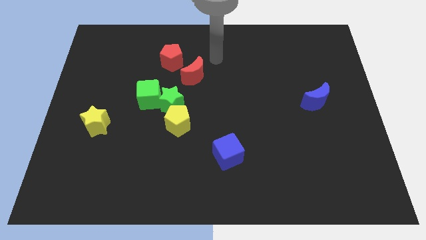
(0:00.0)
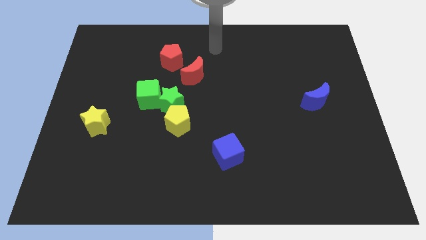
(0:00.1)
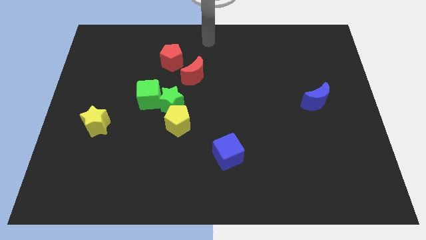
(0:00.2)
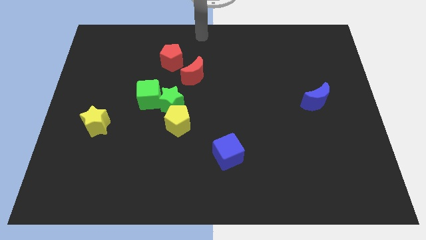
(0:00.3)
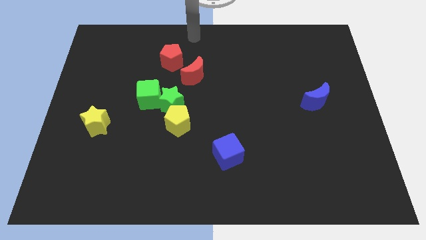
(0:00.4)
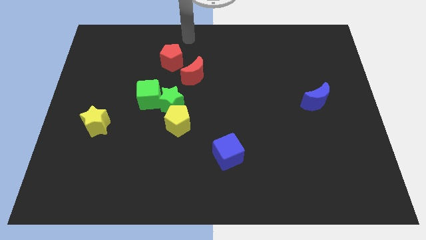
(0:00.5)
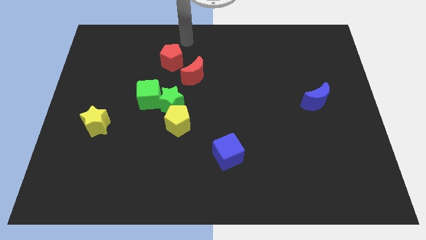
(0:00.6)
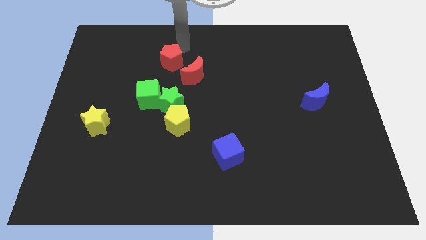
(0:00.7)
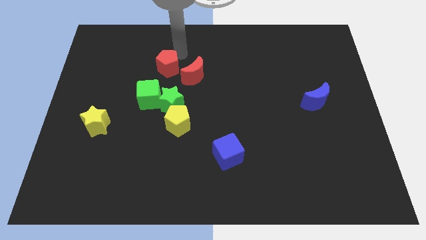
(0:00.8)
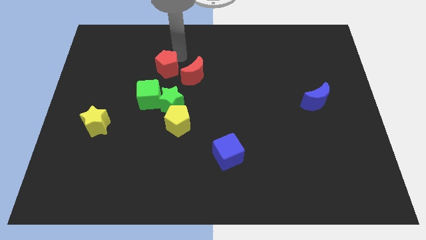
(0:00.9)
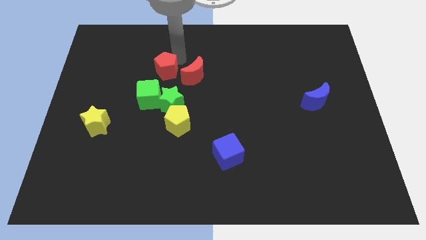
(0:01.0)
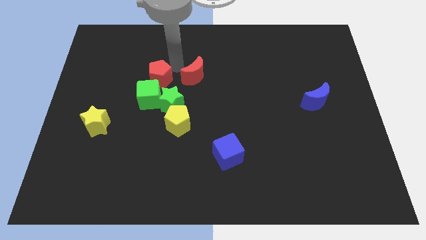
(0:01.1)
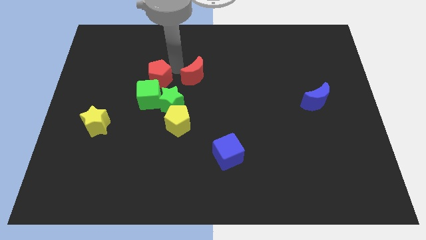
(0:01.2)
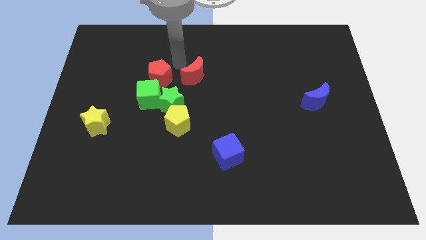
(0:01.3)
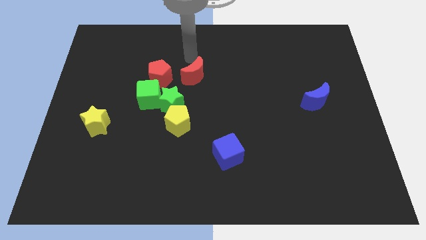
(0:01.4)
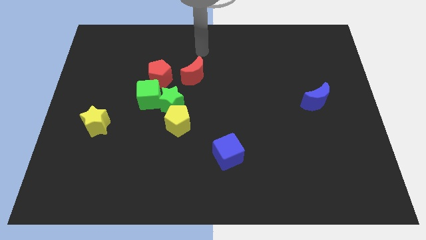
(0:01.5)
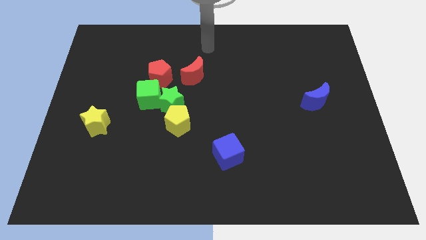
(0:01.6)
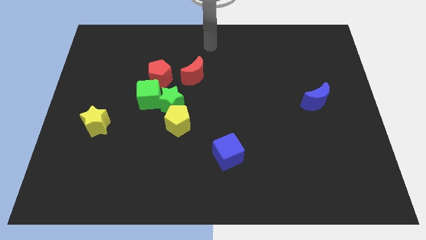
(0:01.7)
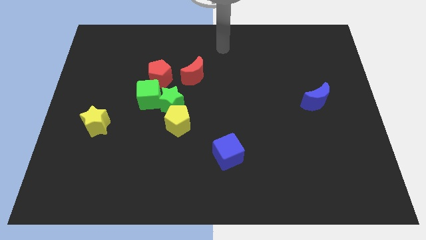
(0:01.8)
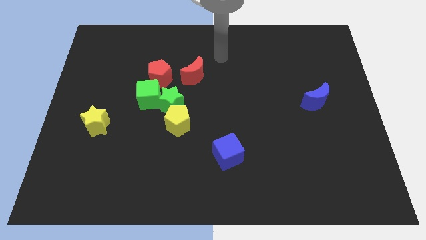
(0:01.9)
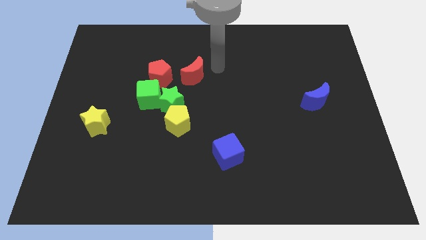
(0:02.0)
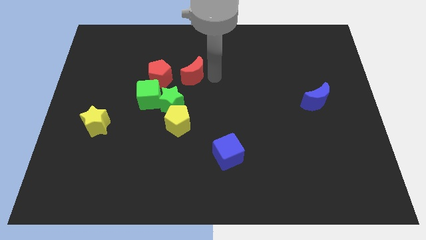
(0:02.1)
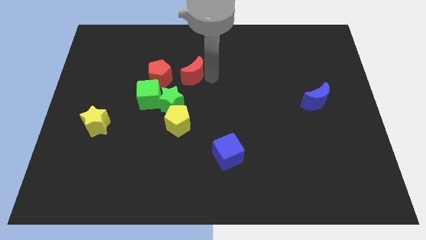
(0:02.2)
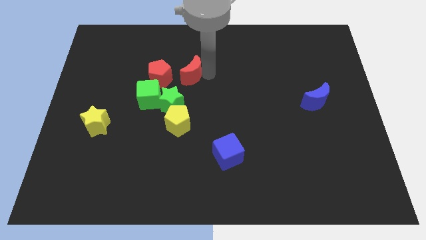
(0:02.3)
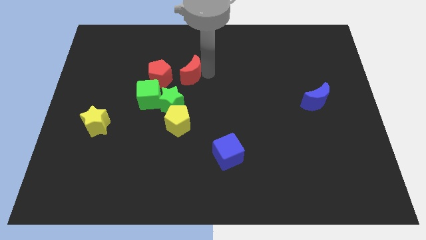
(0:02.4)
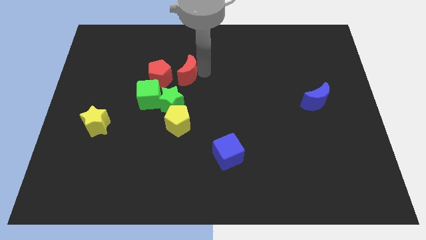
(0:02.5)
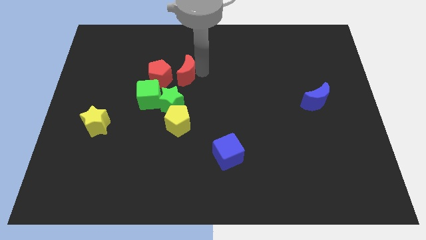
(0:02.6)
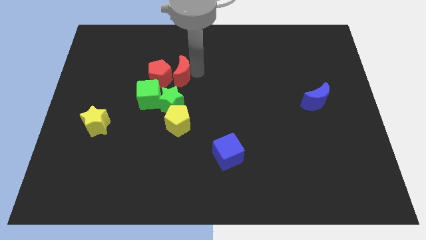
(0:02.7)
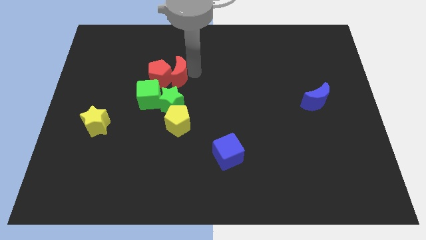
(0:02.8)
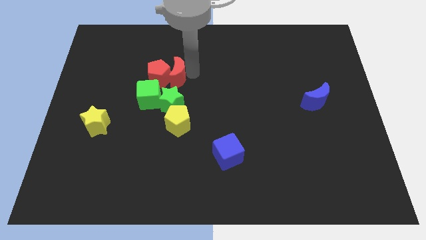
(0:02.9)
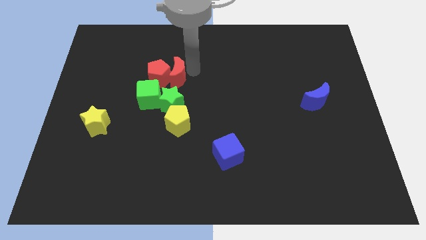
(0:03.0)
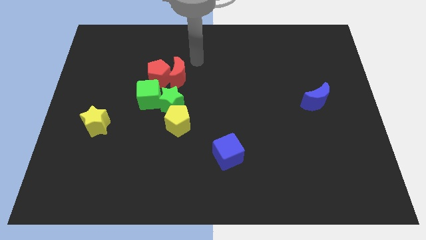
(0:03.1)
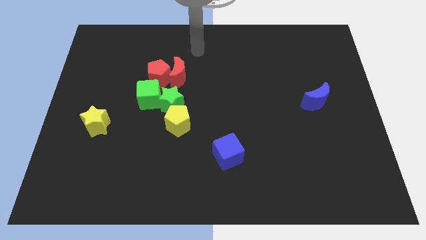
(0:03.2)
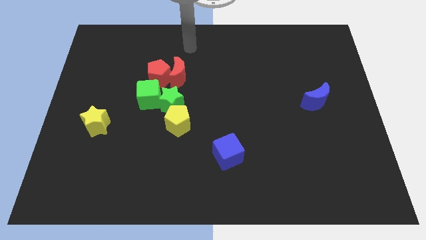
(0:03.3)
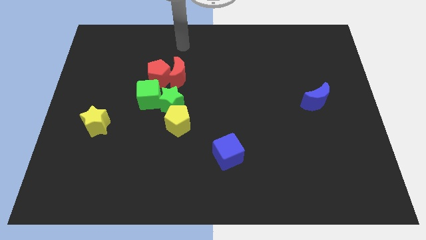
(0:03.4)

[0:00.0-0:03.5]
place red blocks above the green blocks

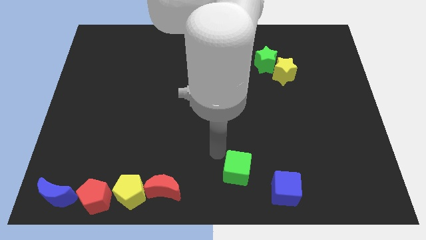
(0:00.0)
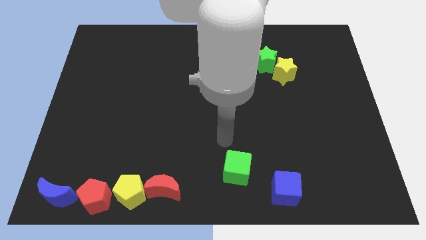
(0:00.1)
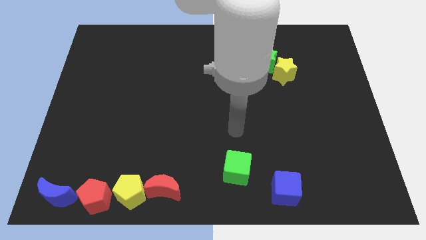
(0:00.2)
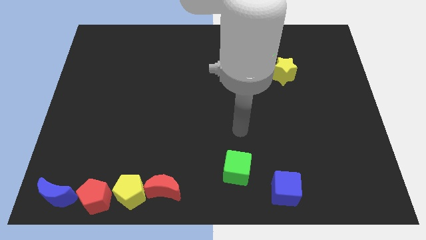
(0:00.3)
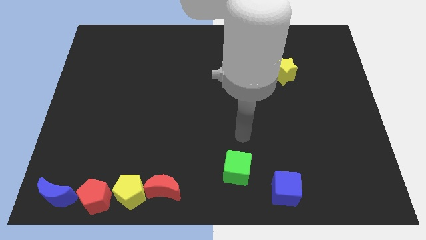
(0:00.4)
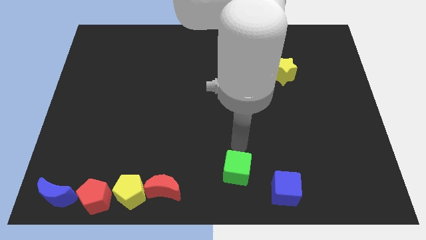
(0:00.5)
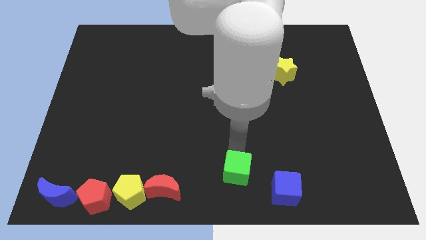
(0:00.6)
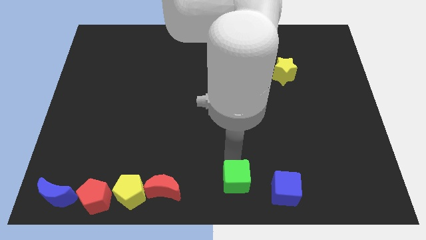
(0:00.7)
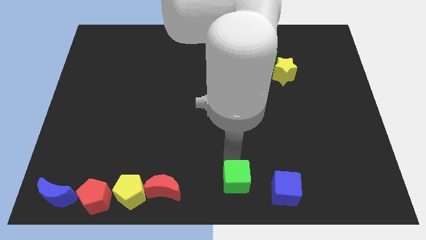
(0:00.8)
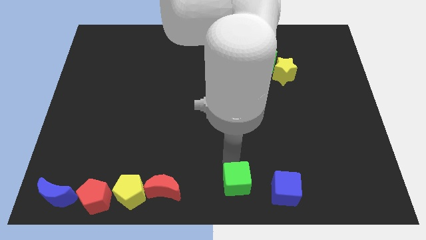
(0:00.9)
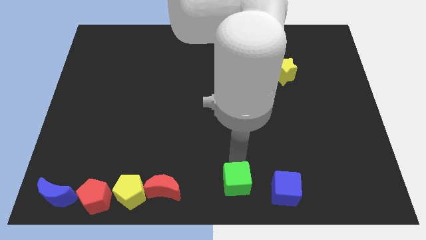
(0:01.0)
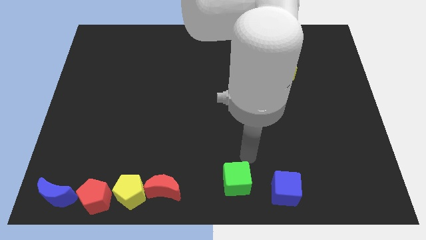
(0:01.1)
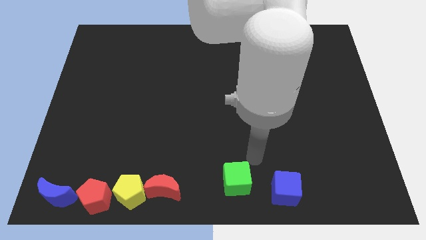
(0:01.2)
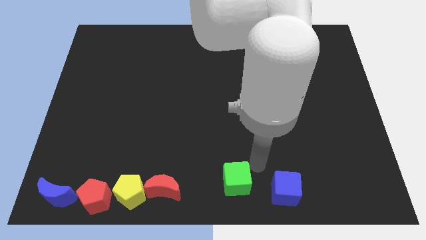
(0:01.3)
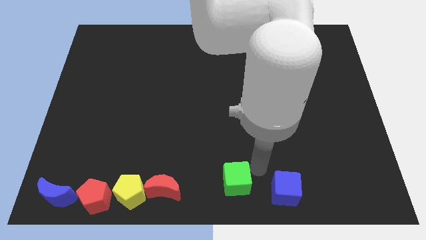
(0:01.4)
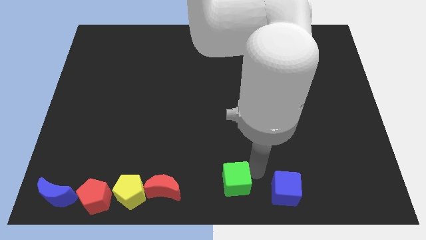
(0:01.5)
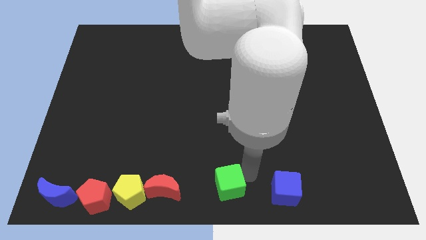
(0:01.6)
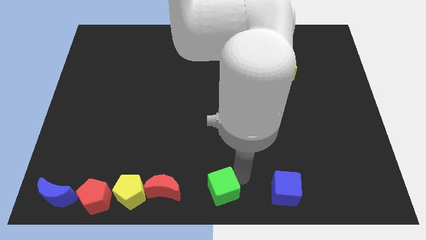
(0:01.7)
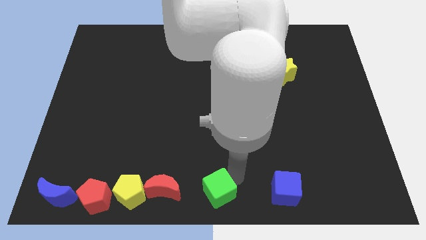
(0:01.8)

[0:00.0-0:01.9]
place the green cube in between red crescent and blue cube

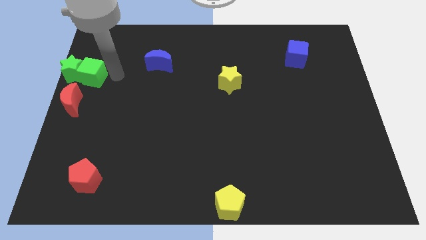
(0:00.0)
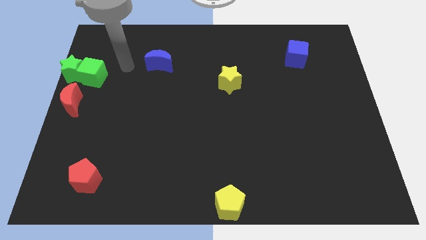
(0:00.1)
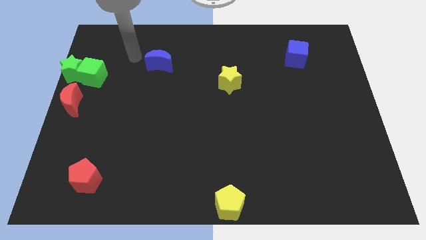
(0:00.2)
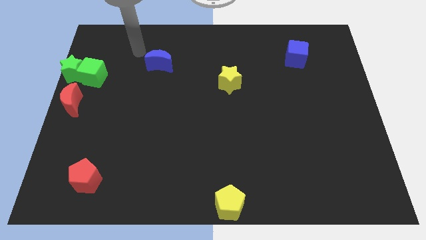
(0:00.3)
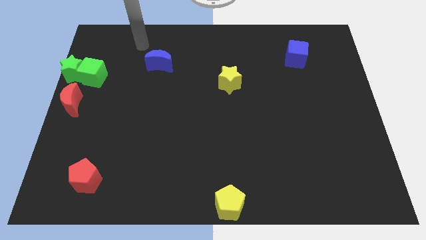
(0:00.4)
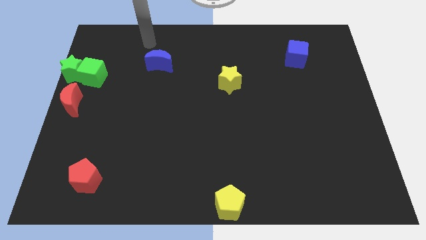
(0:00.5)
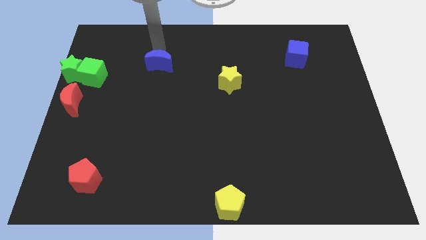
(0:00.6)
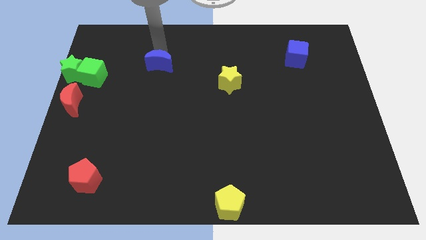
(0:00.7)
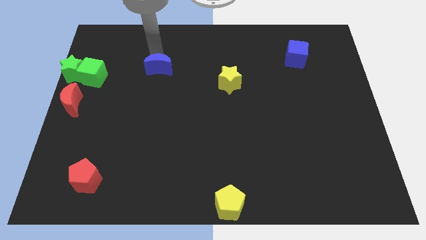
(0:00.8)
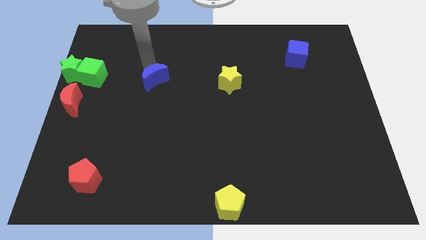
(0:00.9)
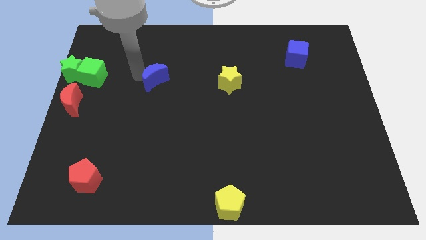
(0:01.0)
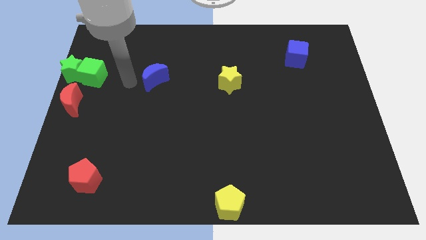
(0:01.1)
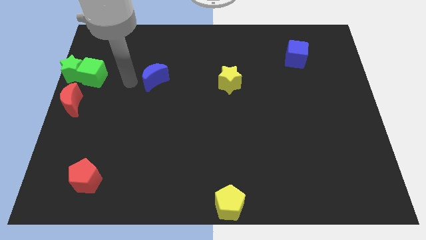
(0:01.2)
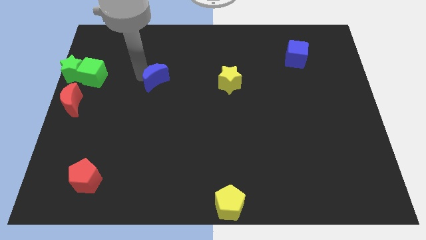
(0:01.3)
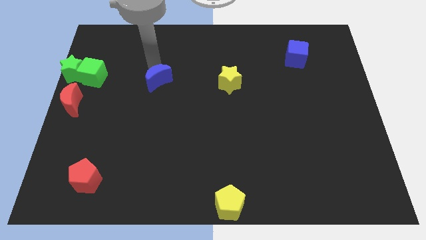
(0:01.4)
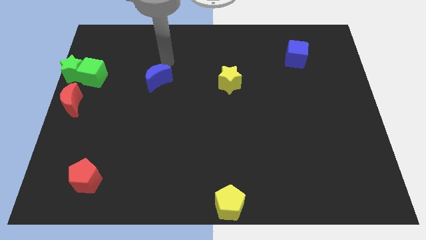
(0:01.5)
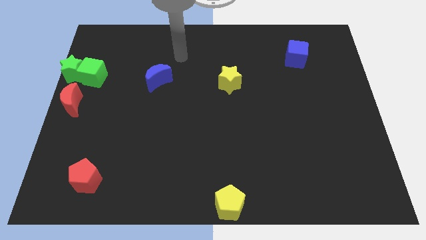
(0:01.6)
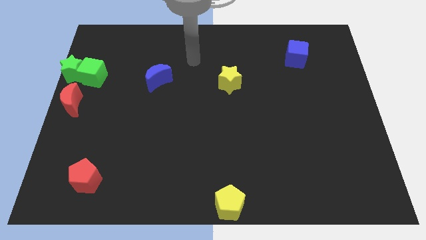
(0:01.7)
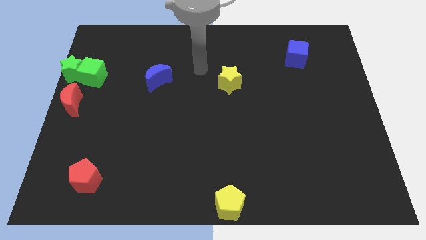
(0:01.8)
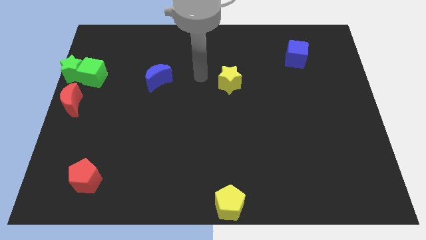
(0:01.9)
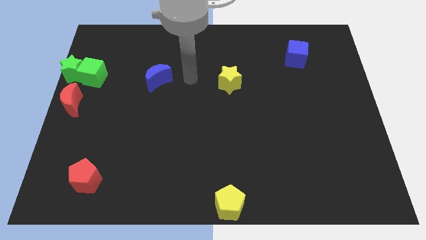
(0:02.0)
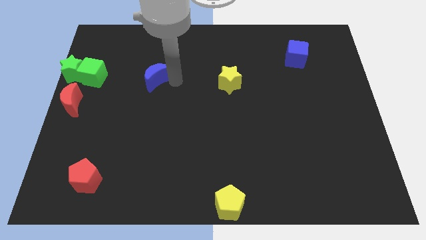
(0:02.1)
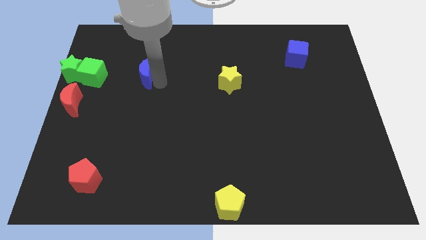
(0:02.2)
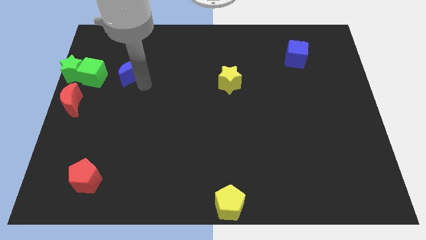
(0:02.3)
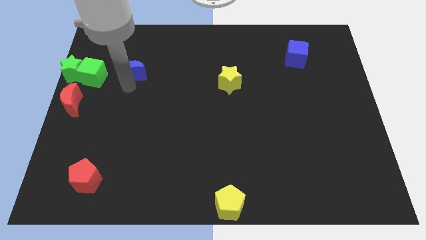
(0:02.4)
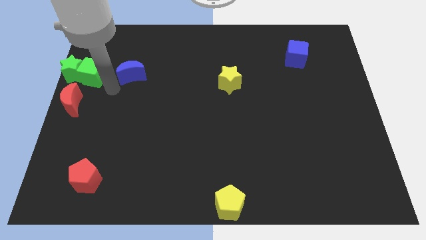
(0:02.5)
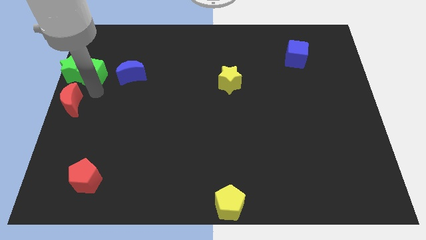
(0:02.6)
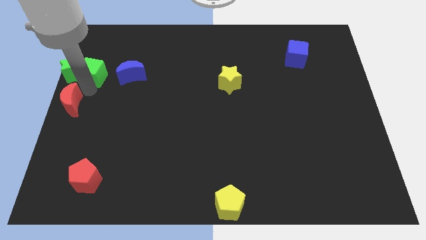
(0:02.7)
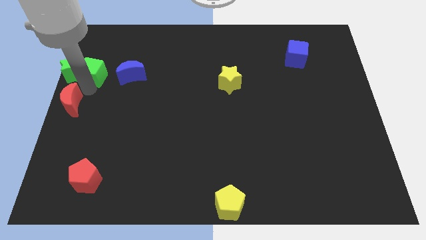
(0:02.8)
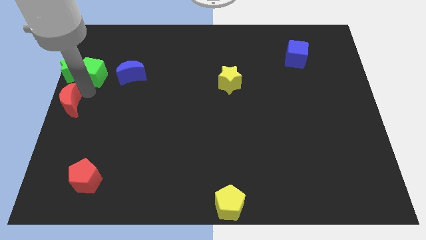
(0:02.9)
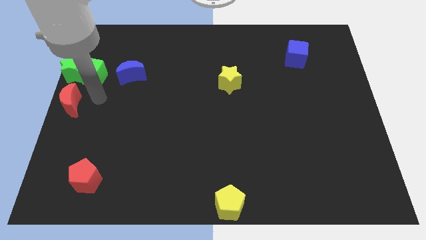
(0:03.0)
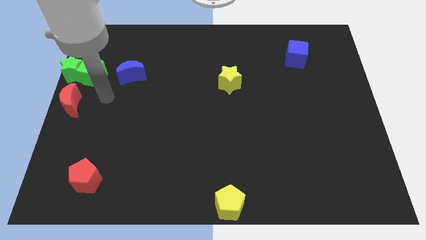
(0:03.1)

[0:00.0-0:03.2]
put the blue crescent on the right side of the green cube
